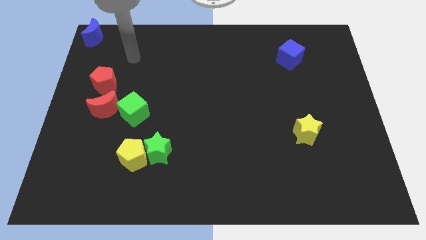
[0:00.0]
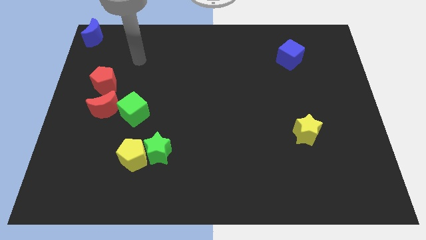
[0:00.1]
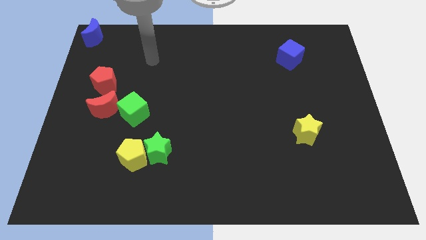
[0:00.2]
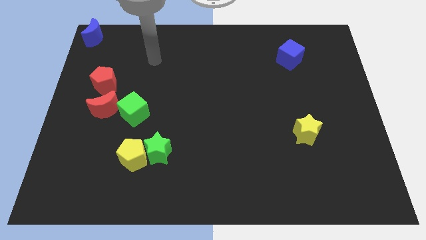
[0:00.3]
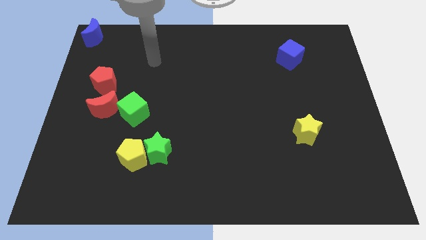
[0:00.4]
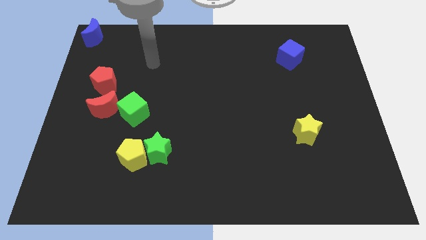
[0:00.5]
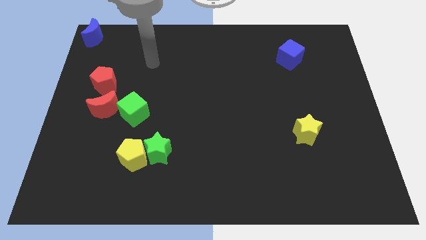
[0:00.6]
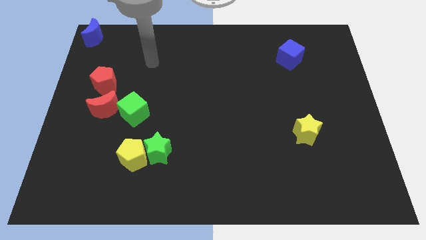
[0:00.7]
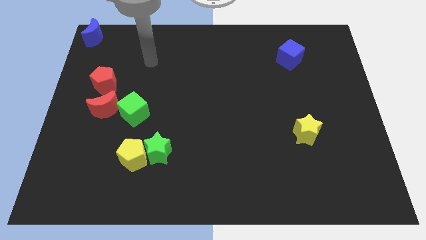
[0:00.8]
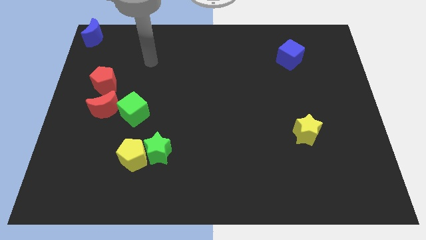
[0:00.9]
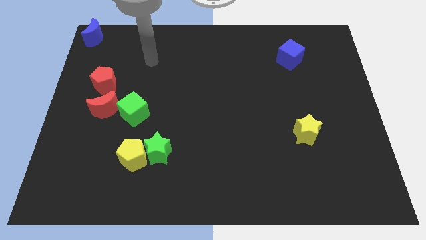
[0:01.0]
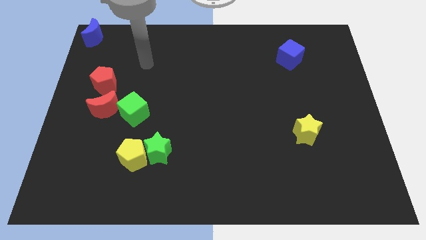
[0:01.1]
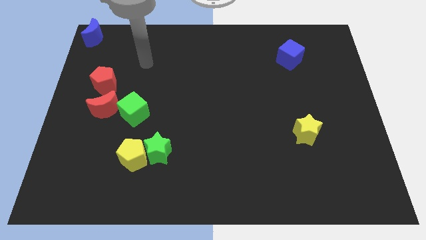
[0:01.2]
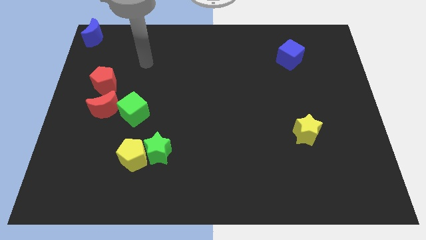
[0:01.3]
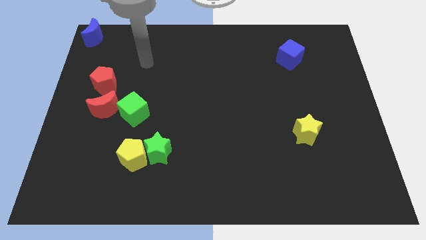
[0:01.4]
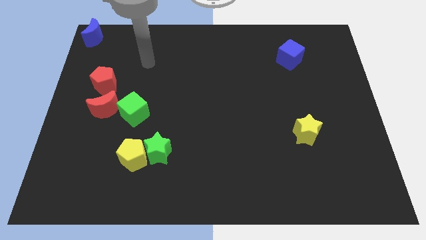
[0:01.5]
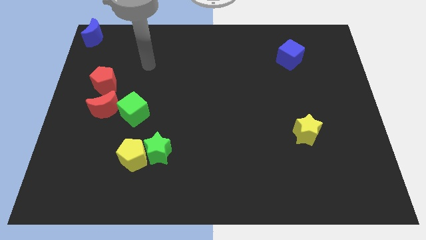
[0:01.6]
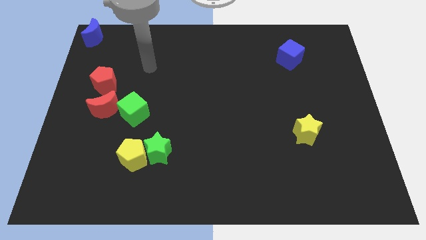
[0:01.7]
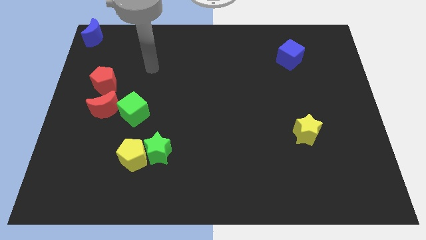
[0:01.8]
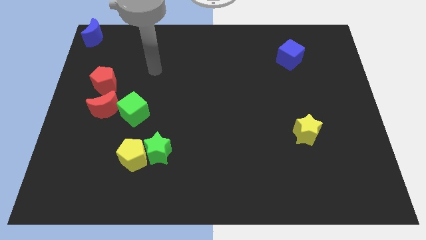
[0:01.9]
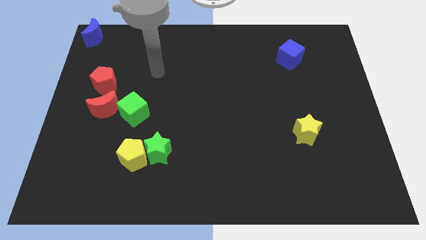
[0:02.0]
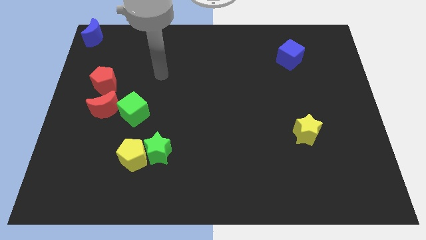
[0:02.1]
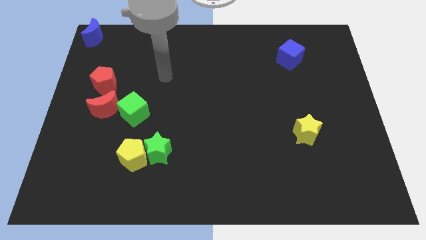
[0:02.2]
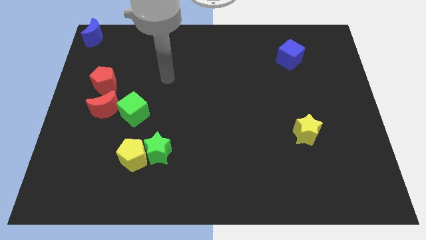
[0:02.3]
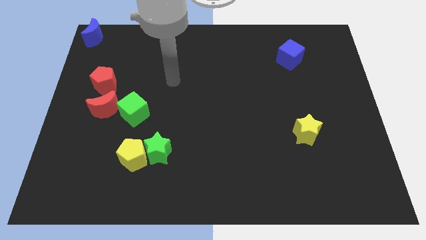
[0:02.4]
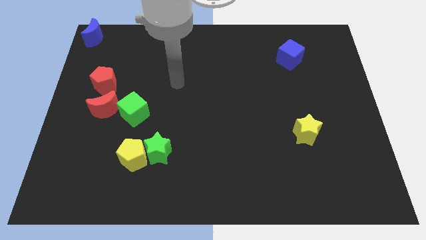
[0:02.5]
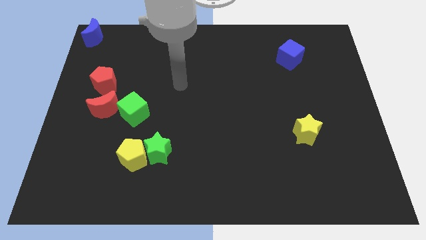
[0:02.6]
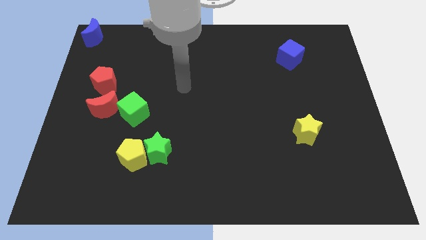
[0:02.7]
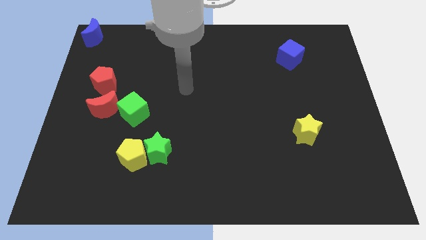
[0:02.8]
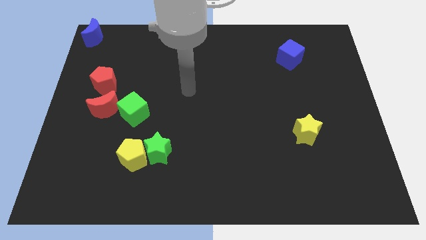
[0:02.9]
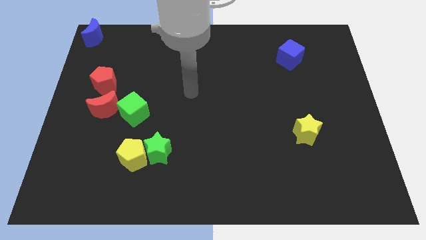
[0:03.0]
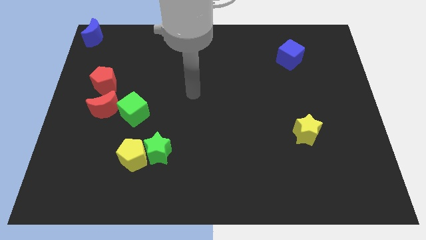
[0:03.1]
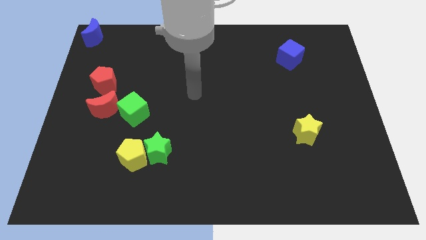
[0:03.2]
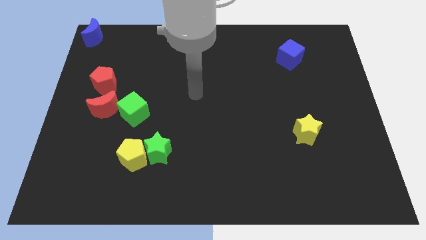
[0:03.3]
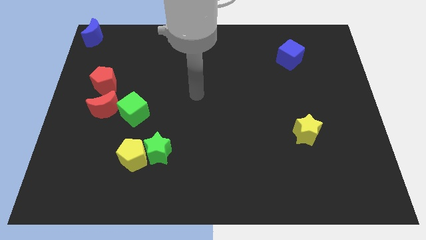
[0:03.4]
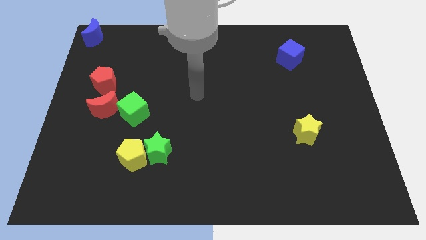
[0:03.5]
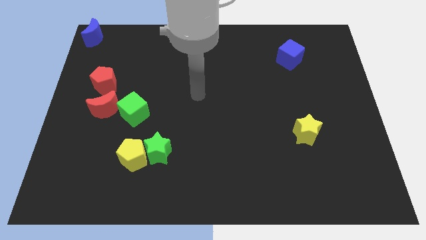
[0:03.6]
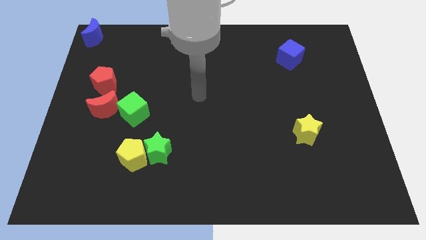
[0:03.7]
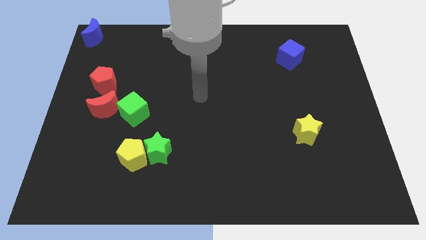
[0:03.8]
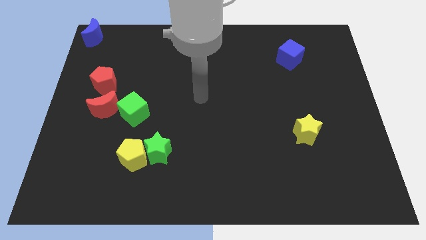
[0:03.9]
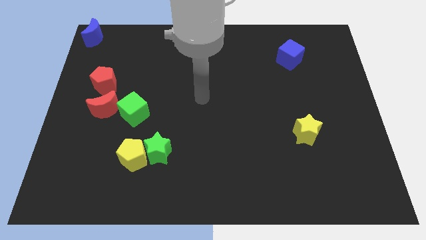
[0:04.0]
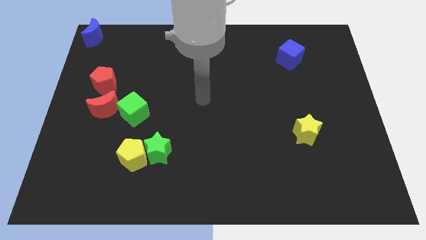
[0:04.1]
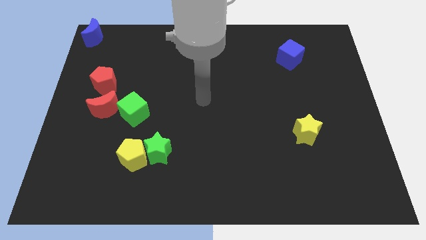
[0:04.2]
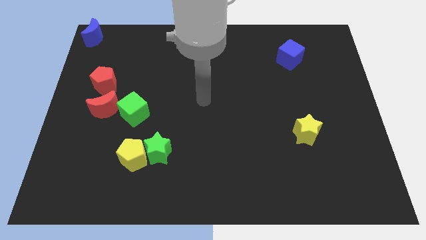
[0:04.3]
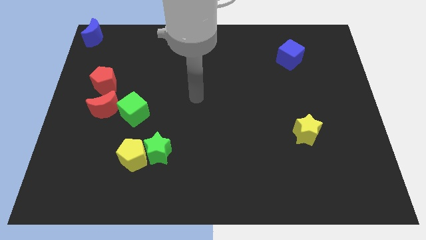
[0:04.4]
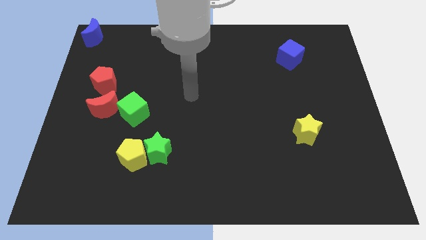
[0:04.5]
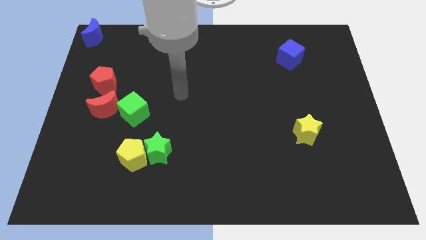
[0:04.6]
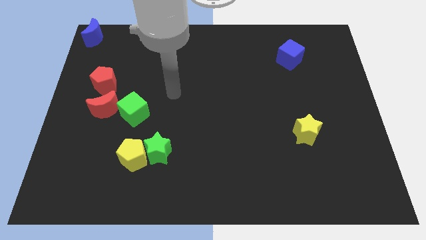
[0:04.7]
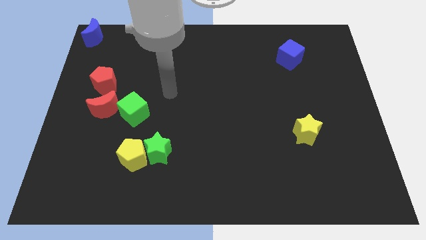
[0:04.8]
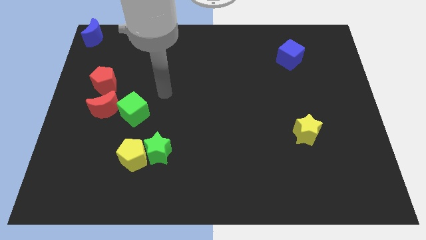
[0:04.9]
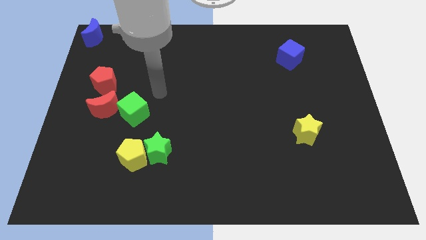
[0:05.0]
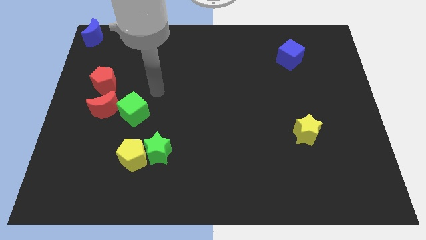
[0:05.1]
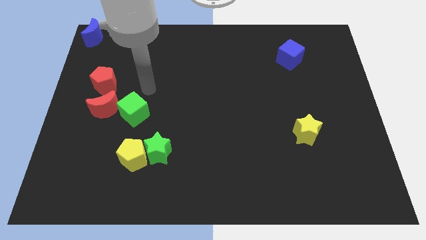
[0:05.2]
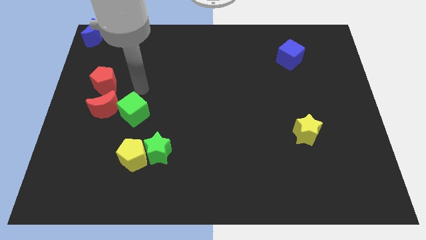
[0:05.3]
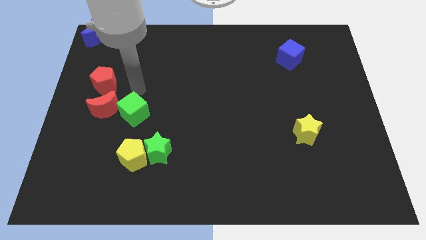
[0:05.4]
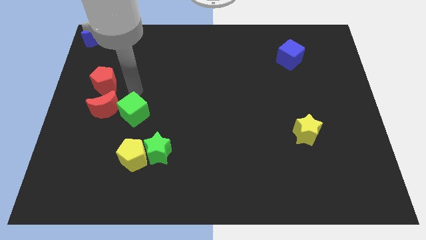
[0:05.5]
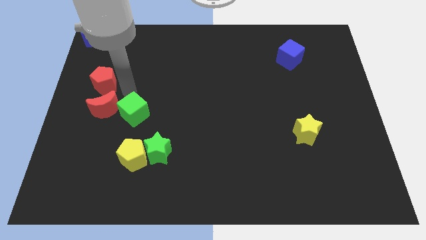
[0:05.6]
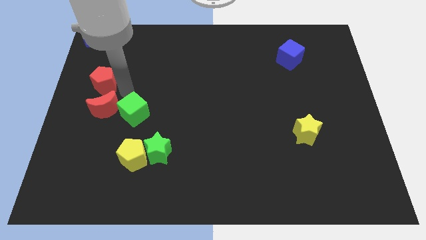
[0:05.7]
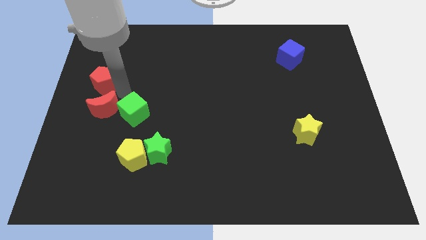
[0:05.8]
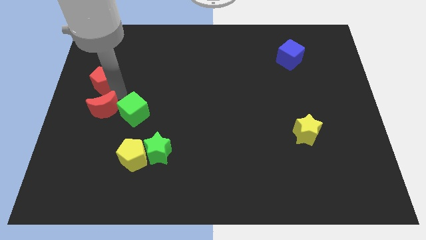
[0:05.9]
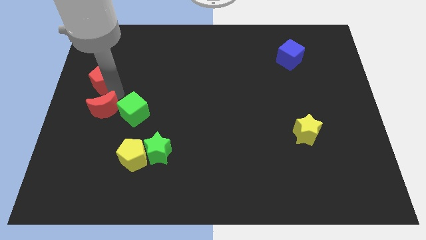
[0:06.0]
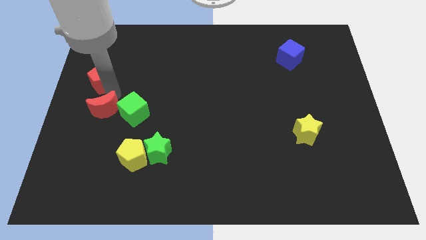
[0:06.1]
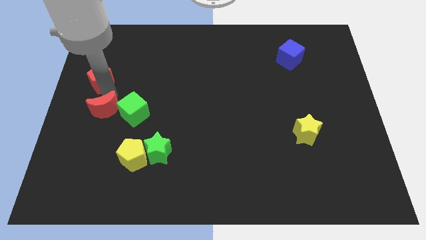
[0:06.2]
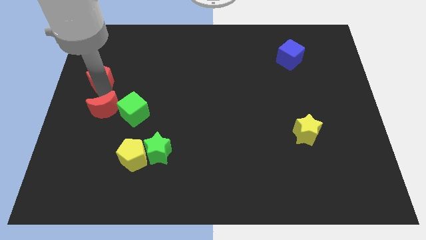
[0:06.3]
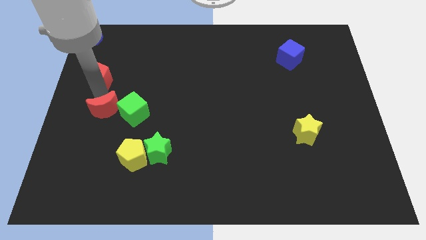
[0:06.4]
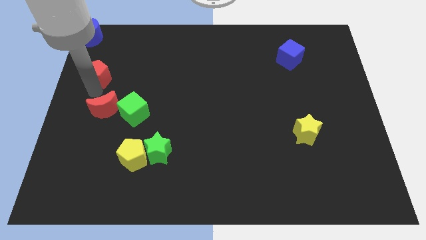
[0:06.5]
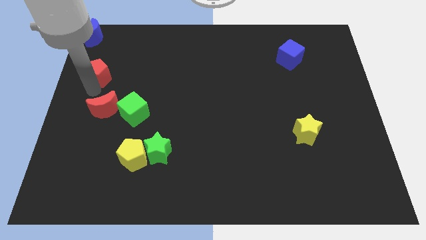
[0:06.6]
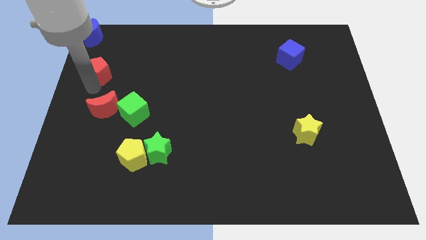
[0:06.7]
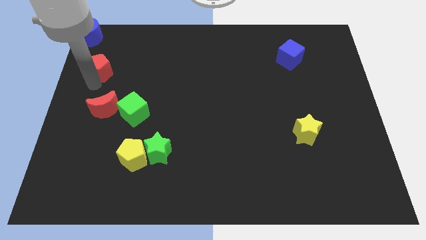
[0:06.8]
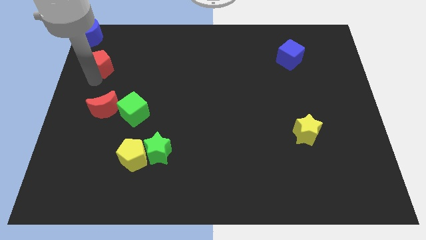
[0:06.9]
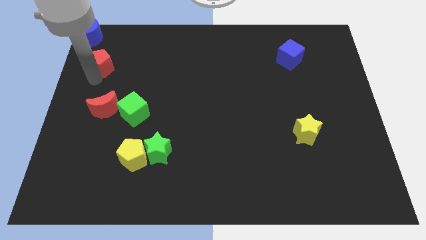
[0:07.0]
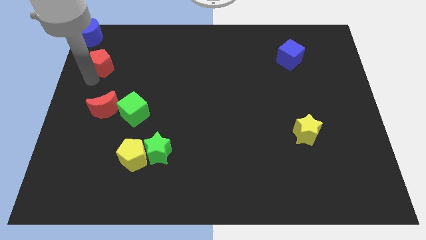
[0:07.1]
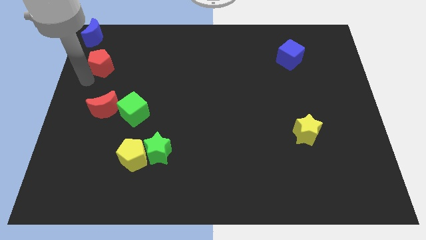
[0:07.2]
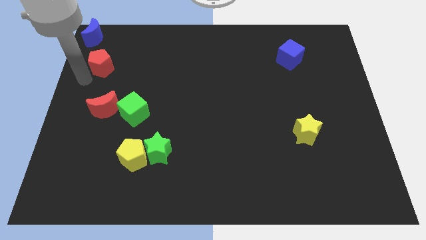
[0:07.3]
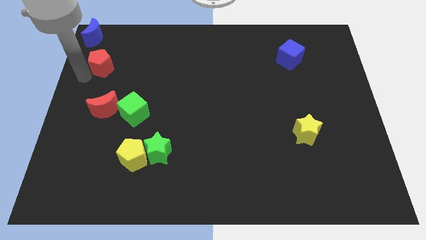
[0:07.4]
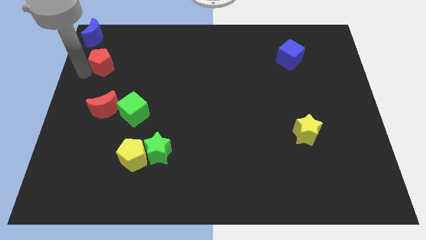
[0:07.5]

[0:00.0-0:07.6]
push the red pentagon towards the bottom right side of the blue moon

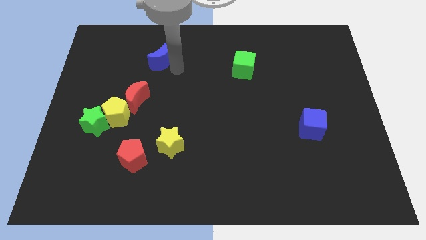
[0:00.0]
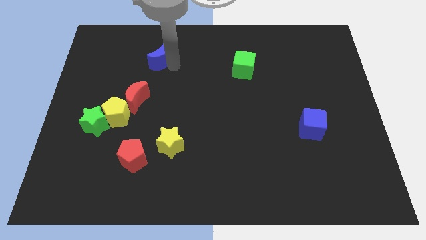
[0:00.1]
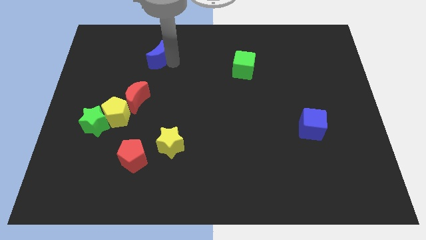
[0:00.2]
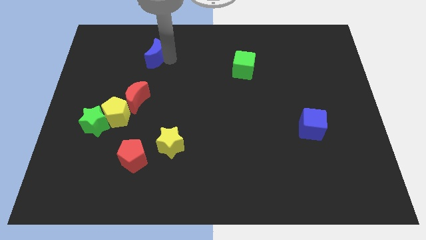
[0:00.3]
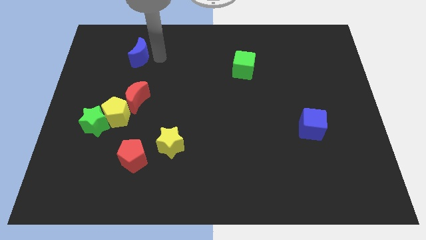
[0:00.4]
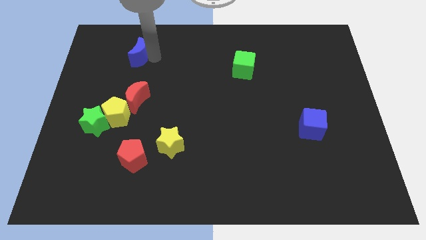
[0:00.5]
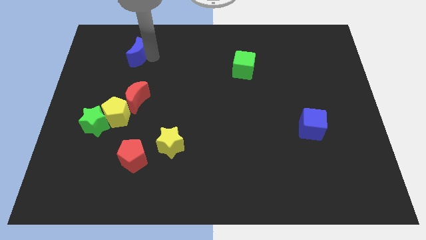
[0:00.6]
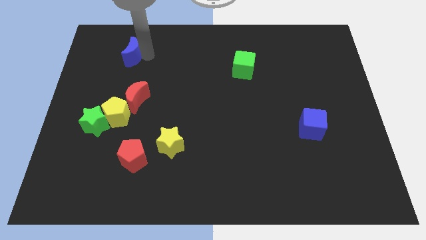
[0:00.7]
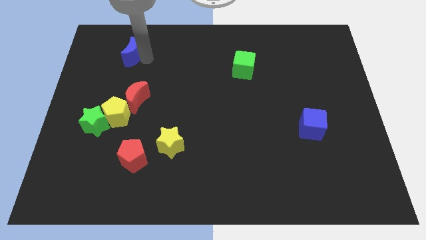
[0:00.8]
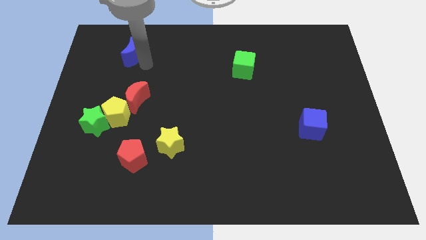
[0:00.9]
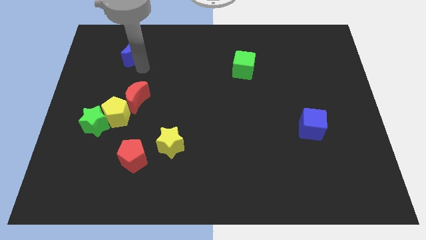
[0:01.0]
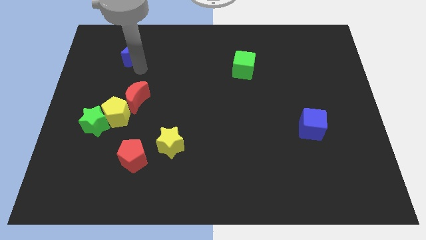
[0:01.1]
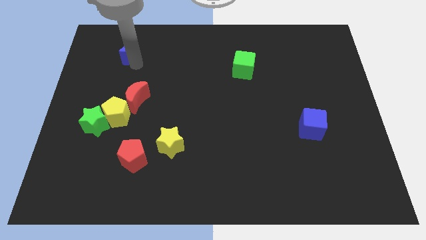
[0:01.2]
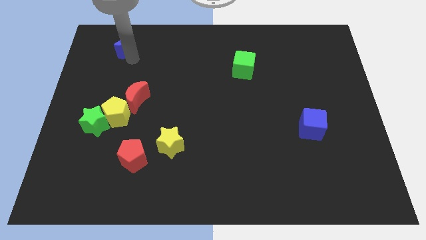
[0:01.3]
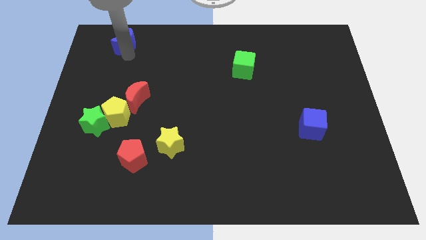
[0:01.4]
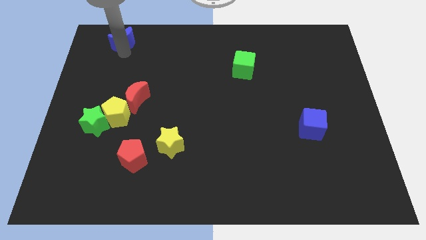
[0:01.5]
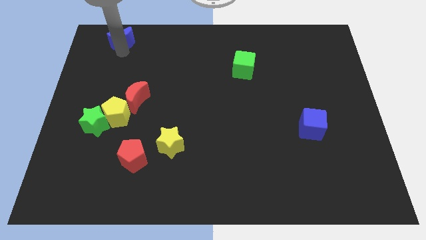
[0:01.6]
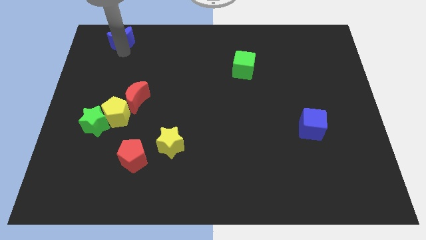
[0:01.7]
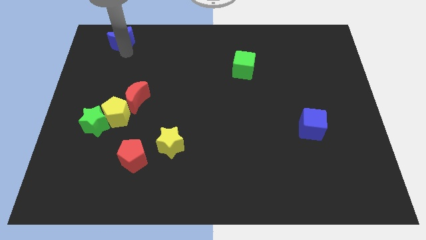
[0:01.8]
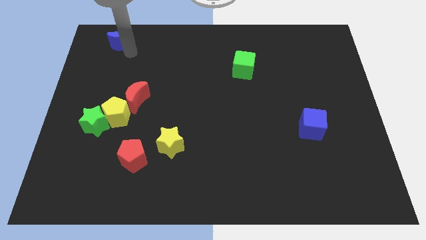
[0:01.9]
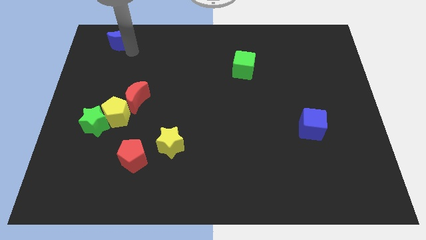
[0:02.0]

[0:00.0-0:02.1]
push the blue crescent to the top of the board
